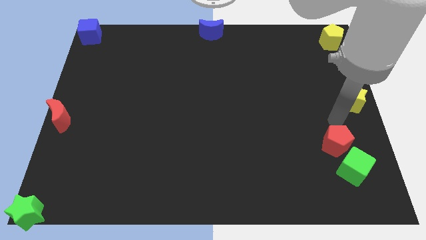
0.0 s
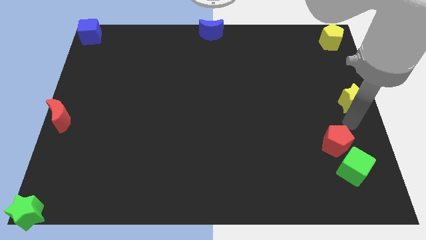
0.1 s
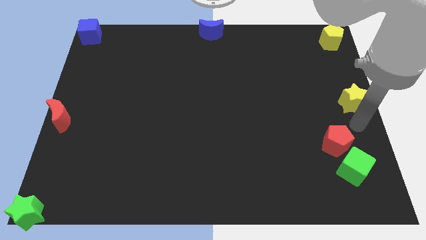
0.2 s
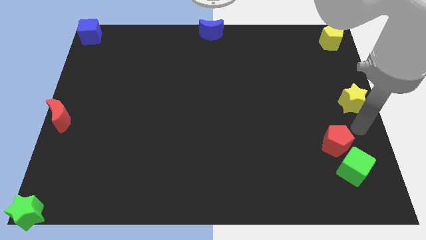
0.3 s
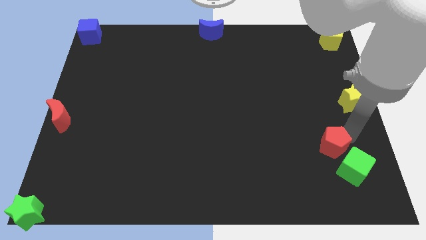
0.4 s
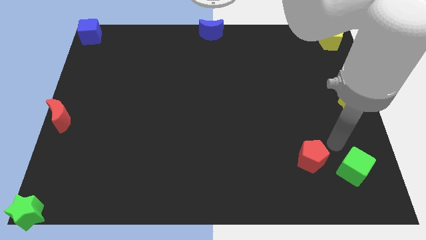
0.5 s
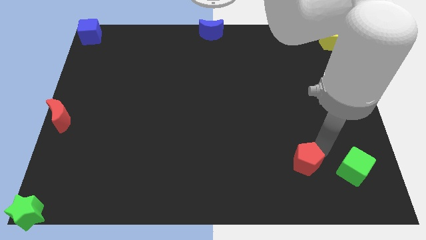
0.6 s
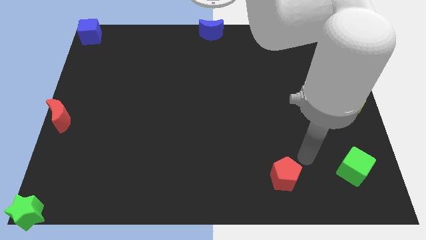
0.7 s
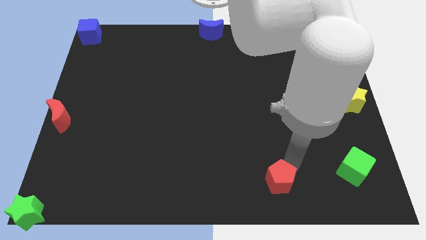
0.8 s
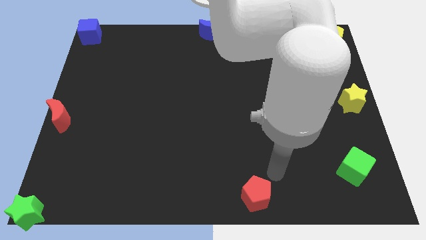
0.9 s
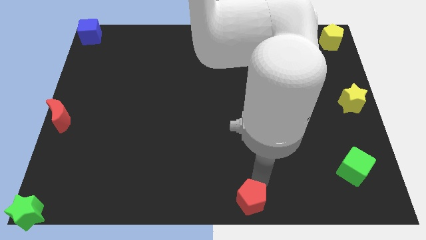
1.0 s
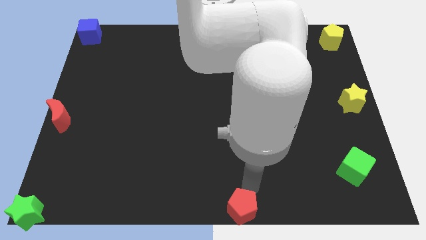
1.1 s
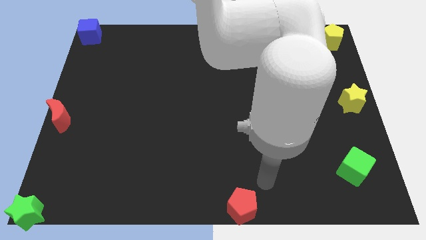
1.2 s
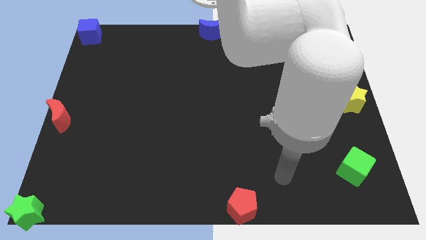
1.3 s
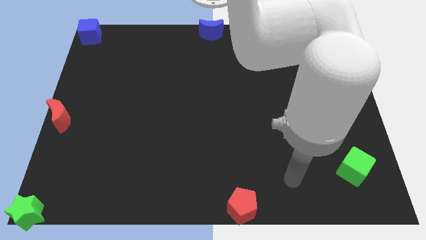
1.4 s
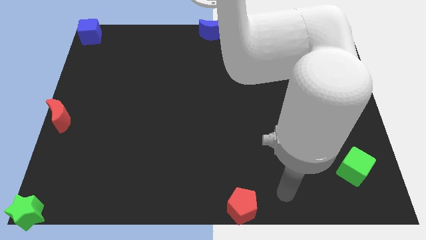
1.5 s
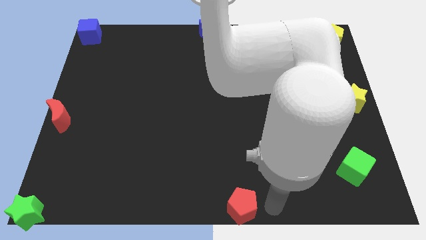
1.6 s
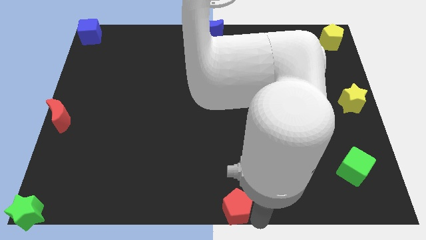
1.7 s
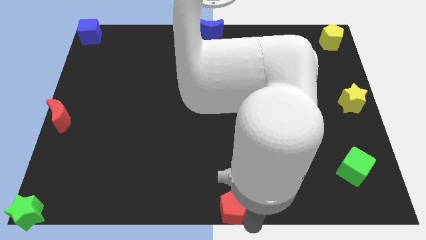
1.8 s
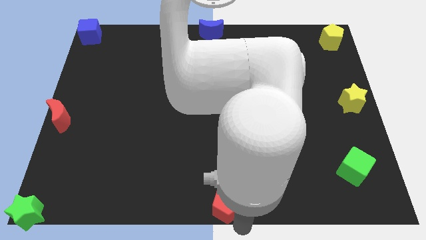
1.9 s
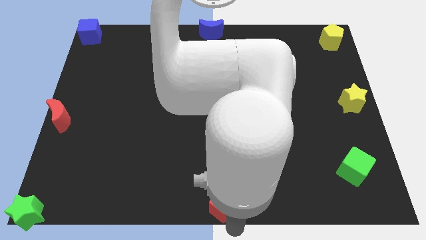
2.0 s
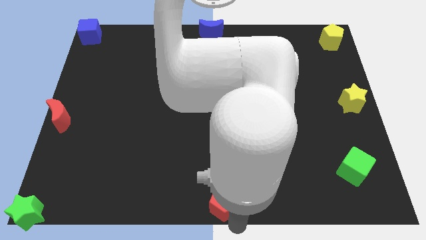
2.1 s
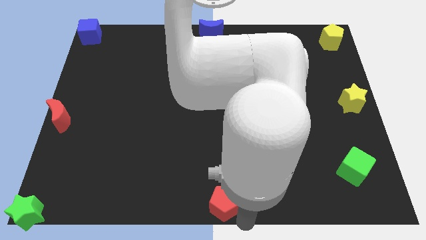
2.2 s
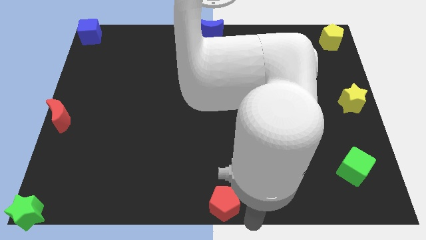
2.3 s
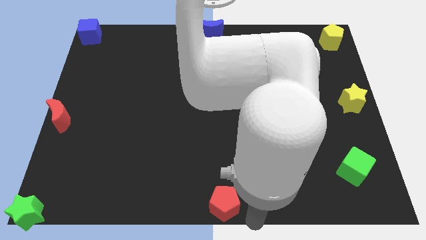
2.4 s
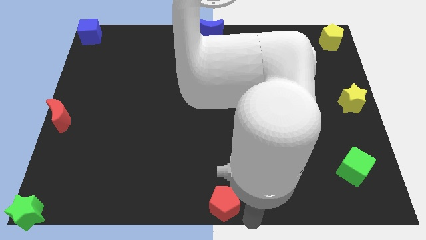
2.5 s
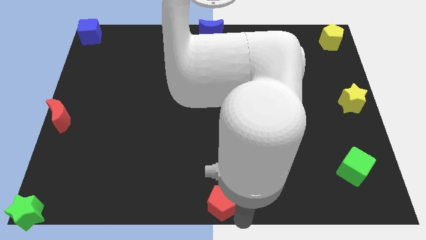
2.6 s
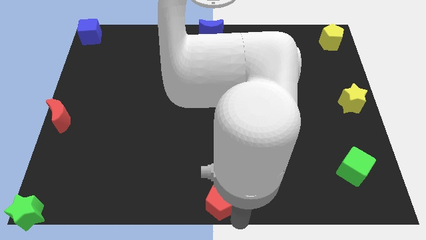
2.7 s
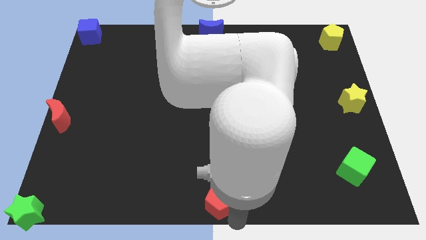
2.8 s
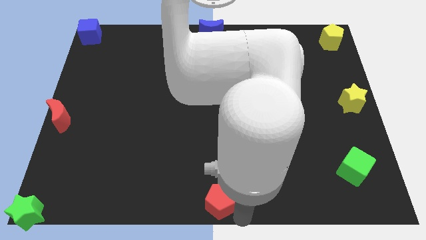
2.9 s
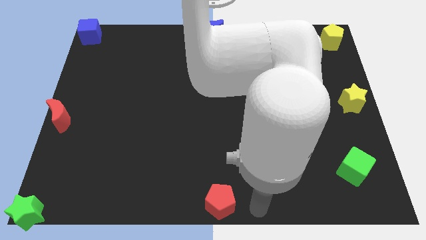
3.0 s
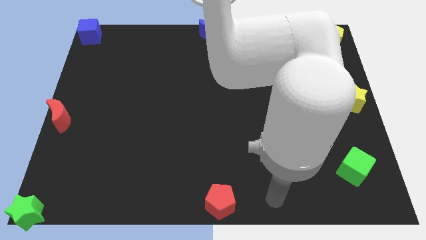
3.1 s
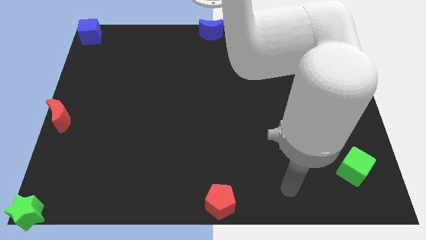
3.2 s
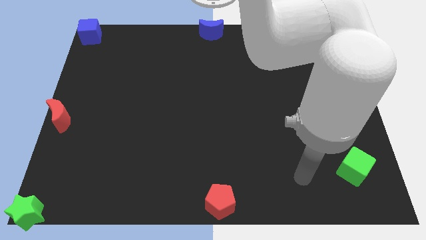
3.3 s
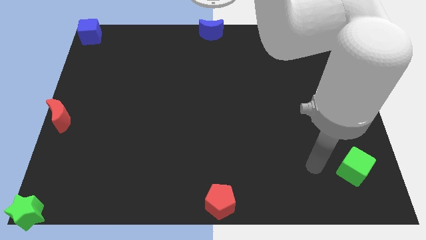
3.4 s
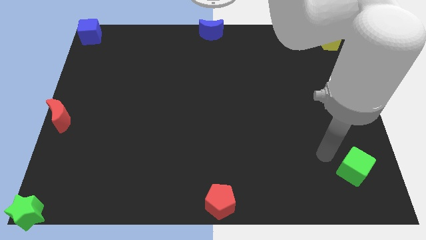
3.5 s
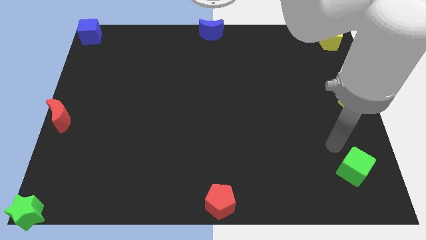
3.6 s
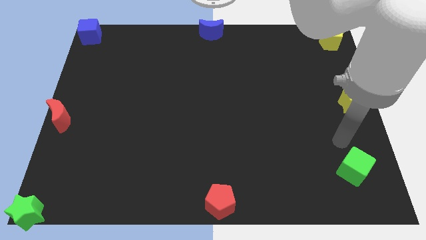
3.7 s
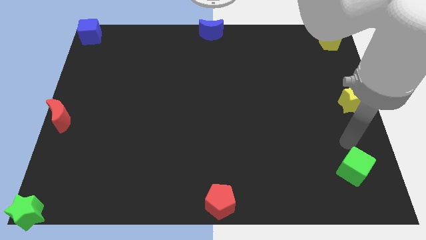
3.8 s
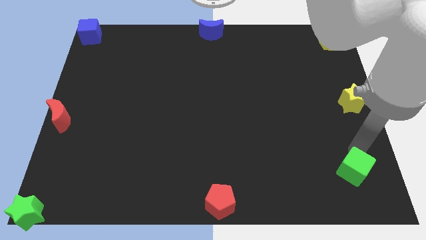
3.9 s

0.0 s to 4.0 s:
place the red pentagon to the bottom center

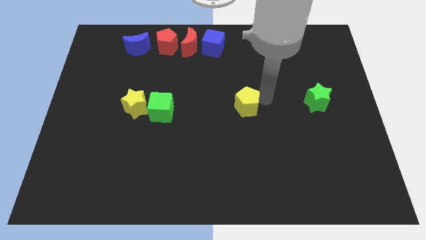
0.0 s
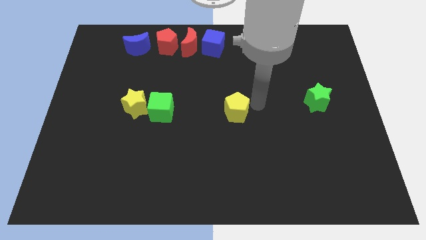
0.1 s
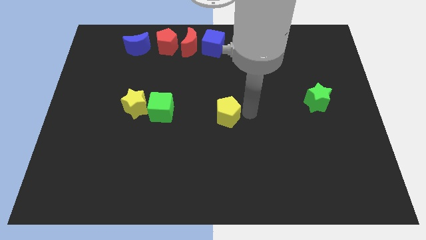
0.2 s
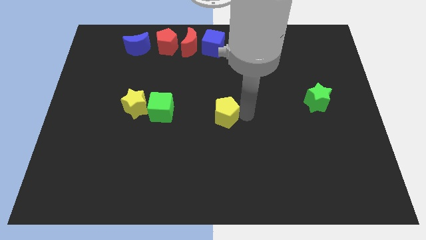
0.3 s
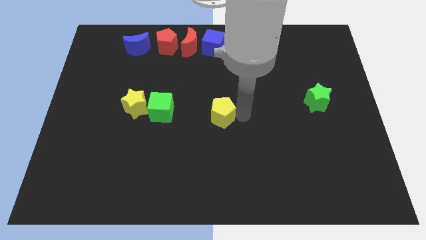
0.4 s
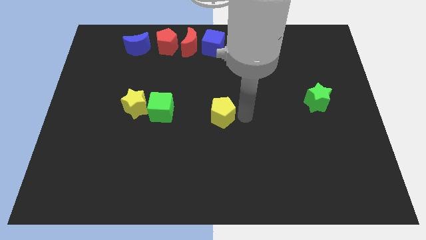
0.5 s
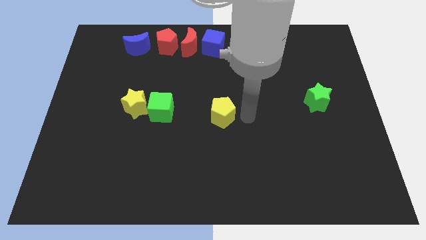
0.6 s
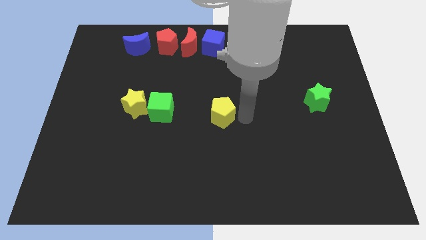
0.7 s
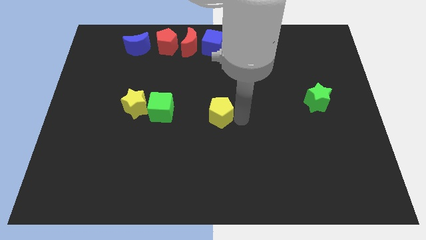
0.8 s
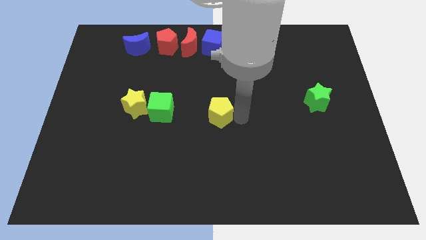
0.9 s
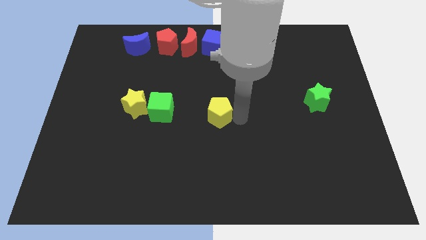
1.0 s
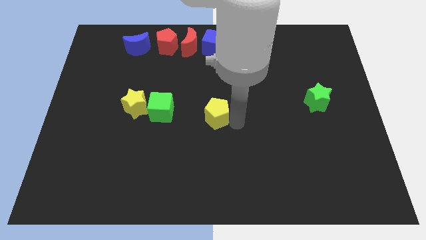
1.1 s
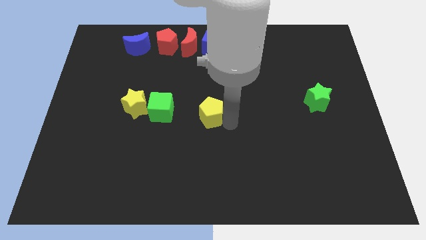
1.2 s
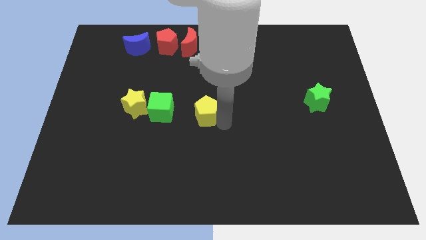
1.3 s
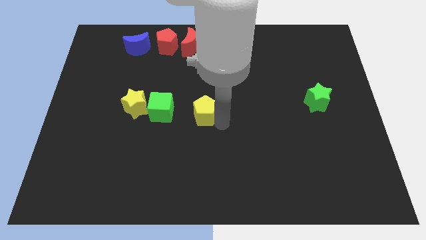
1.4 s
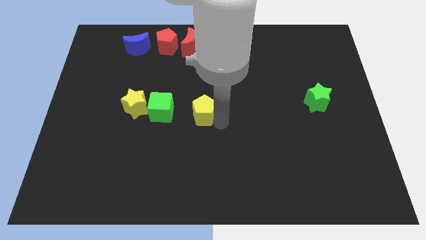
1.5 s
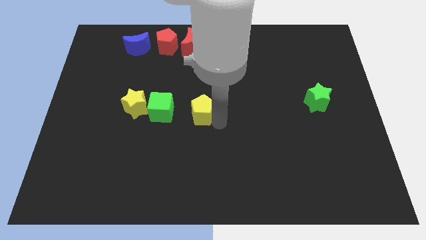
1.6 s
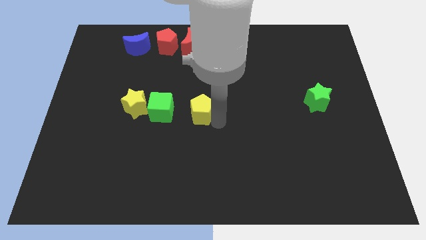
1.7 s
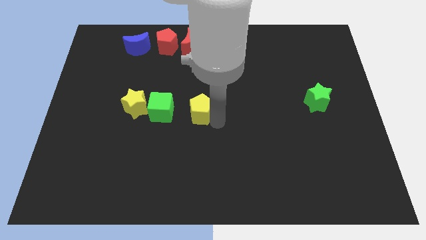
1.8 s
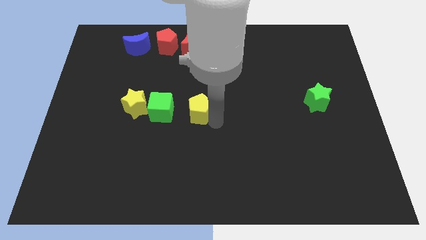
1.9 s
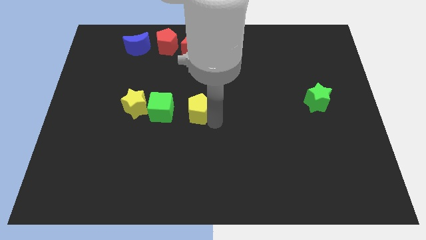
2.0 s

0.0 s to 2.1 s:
push the yellow pentagon to the right of green cube

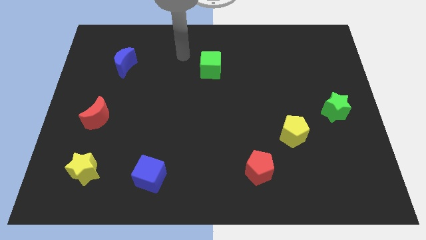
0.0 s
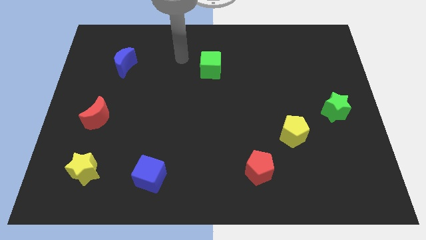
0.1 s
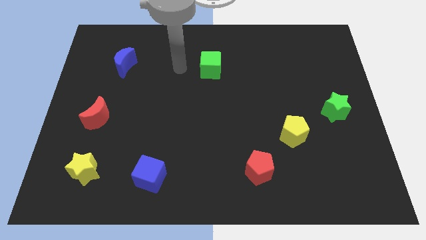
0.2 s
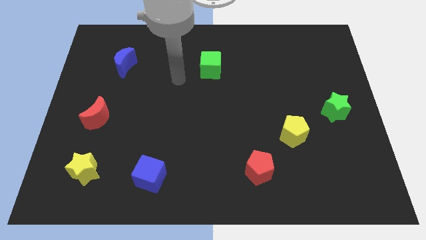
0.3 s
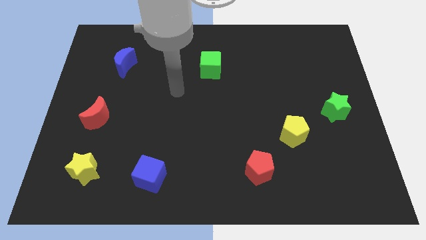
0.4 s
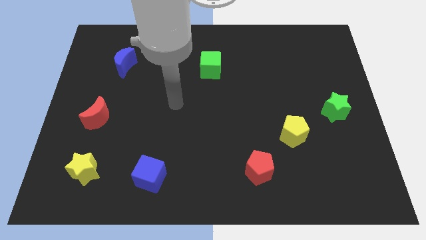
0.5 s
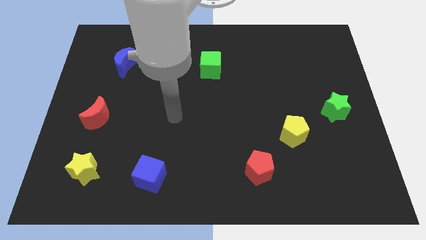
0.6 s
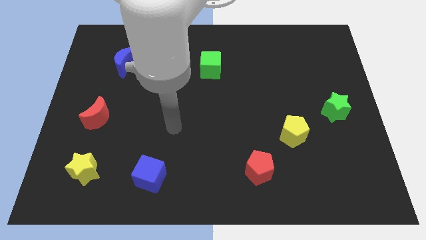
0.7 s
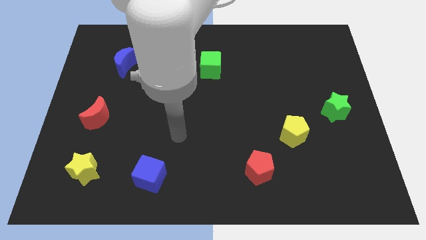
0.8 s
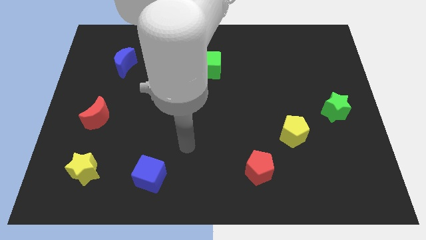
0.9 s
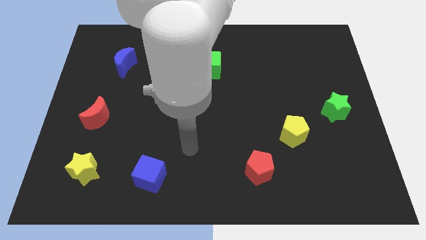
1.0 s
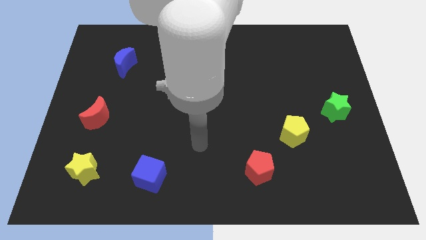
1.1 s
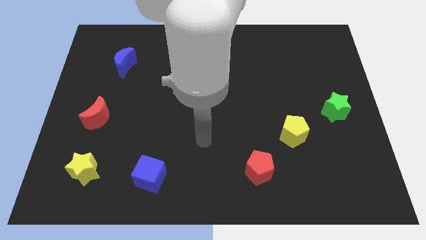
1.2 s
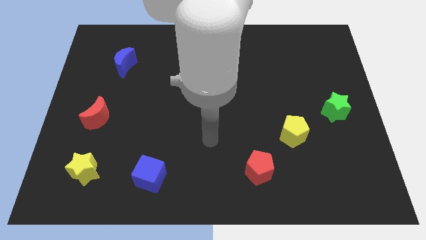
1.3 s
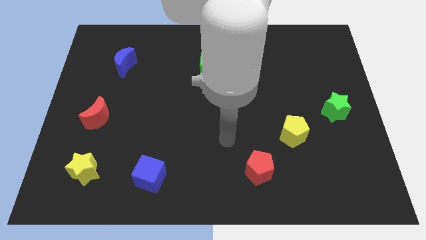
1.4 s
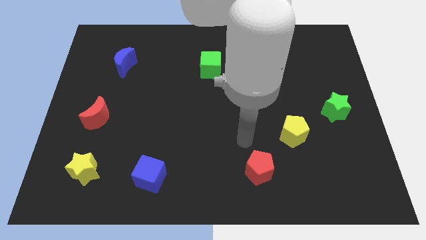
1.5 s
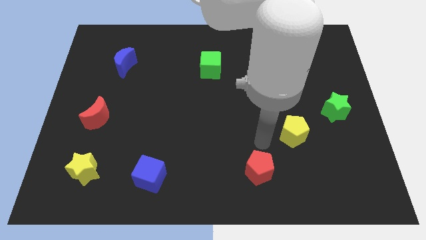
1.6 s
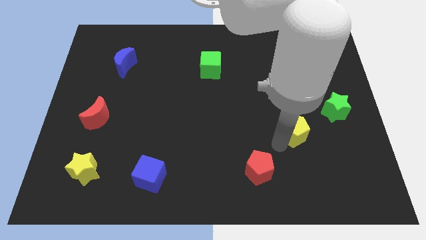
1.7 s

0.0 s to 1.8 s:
put your hand above the red pentagon

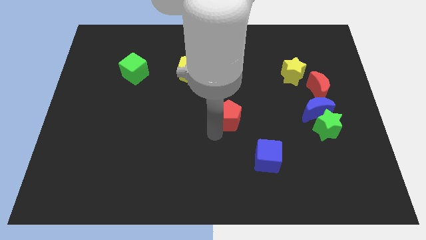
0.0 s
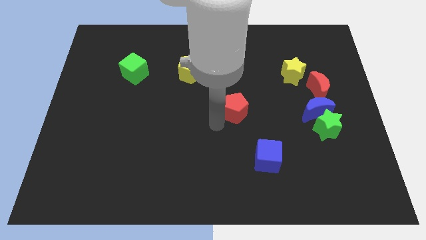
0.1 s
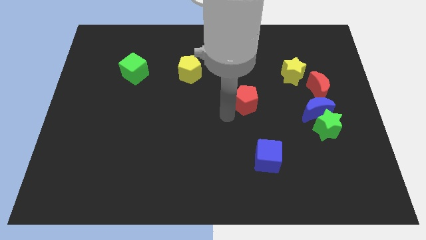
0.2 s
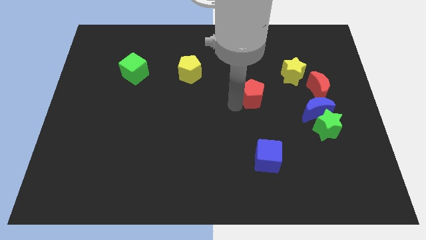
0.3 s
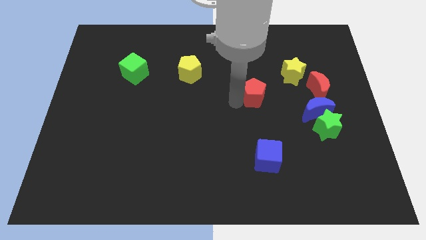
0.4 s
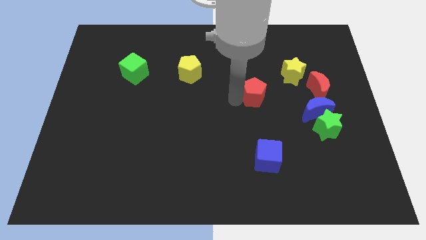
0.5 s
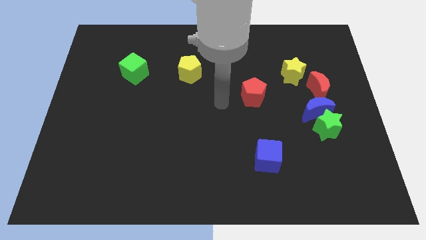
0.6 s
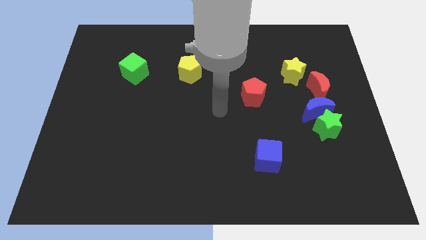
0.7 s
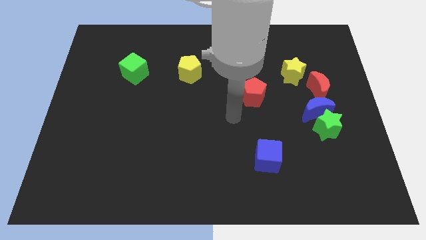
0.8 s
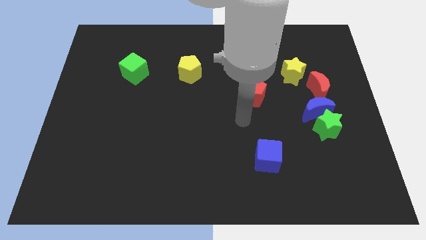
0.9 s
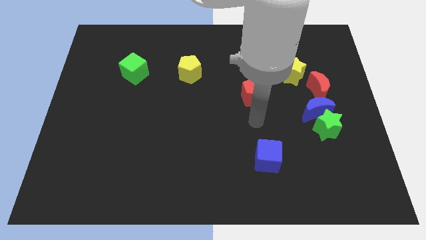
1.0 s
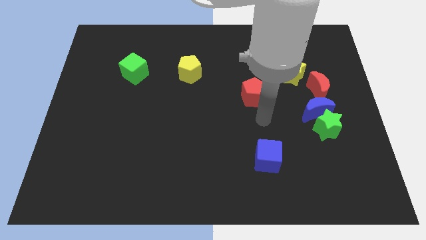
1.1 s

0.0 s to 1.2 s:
move the red pentagon parallel to the left of red crescent
